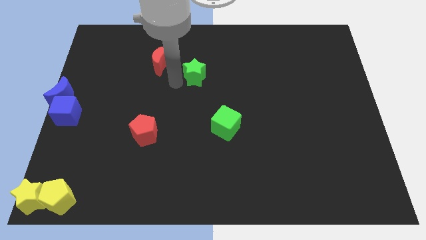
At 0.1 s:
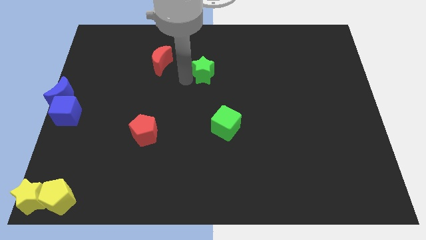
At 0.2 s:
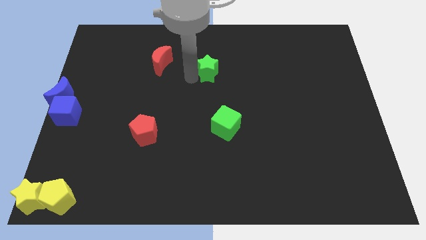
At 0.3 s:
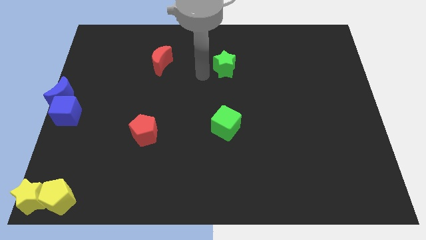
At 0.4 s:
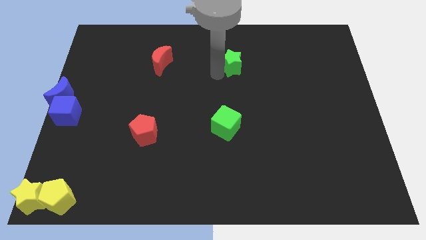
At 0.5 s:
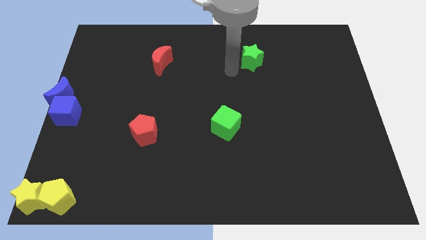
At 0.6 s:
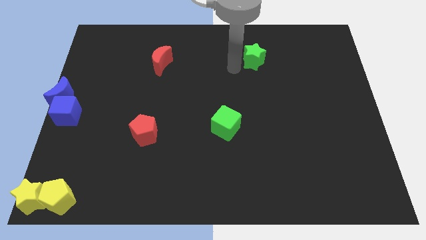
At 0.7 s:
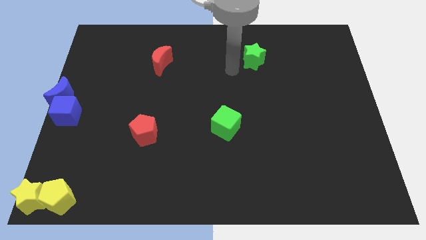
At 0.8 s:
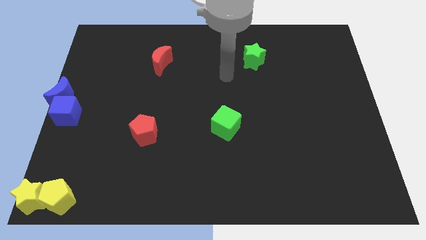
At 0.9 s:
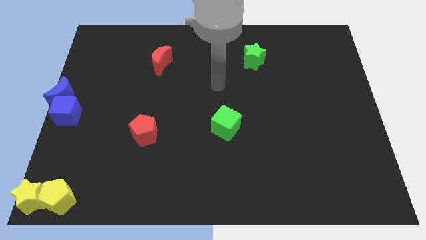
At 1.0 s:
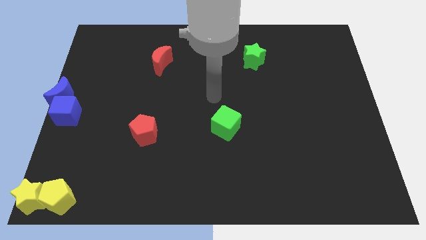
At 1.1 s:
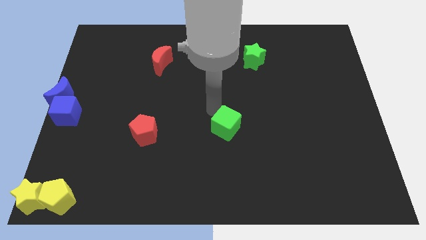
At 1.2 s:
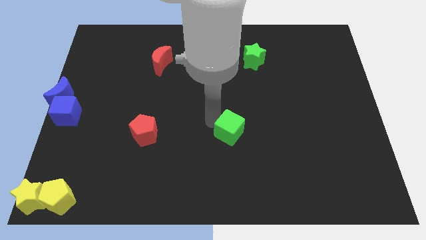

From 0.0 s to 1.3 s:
move the green star diagonally top right to the green cube

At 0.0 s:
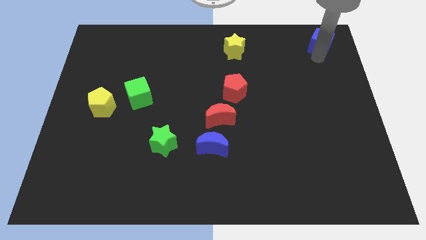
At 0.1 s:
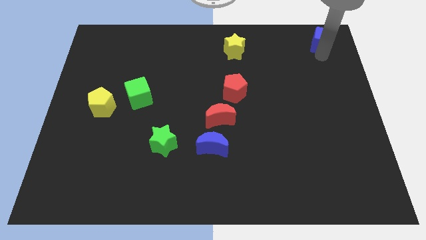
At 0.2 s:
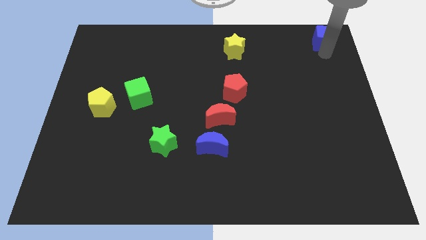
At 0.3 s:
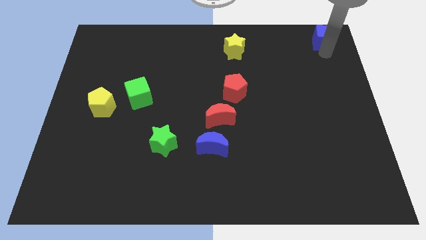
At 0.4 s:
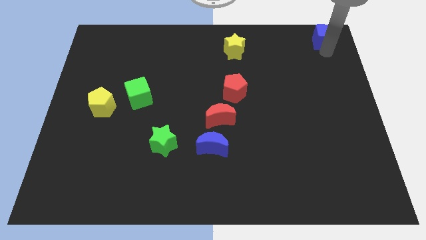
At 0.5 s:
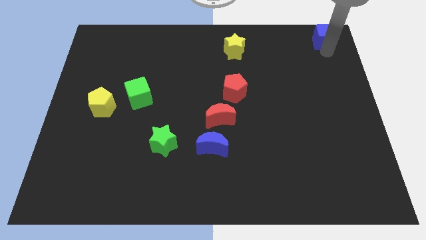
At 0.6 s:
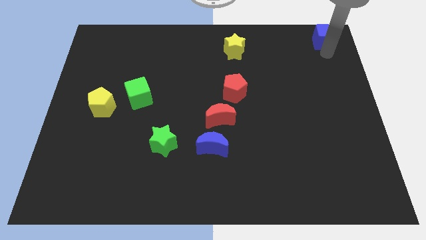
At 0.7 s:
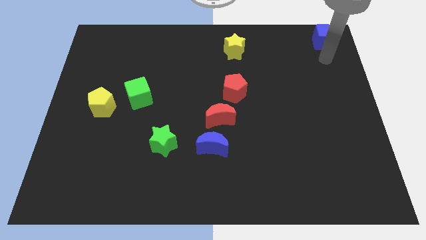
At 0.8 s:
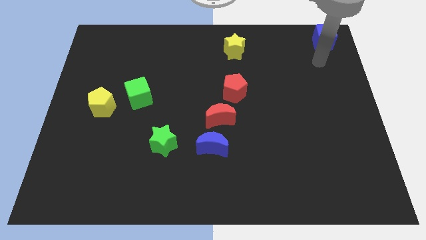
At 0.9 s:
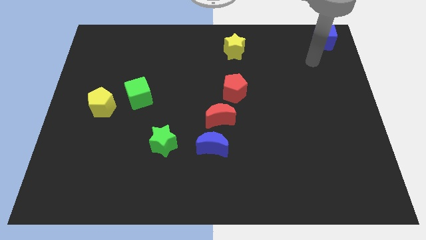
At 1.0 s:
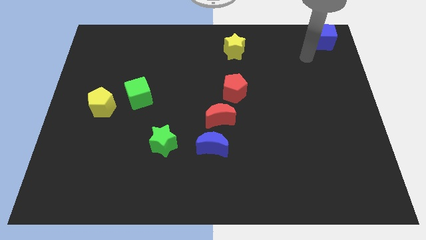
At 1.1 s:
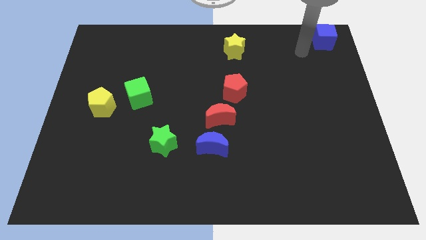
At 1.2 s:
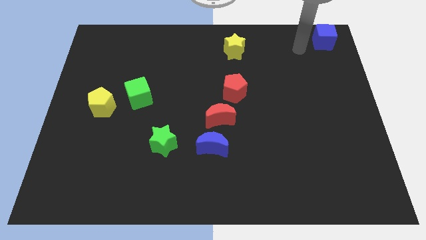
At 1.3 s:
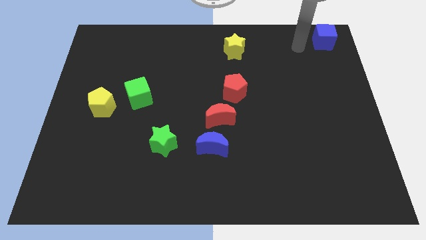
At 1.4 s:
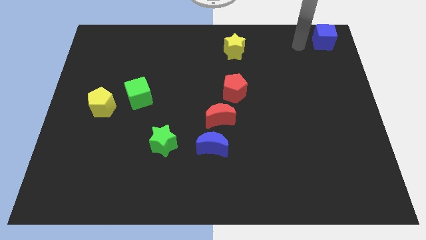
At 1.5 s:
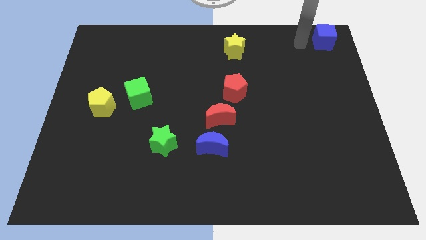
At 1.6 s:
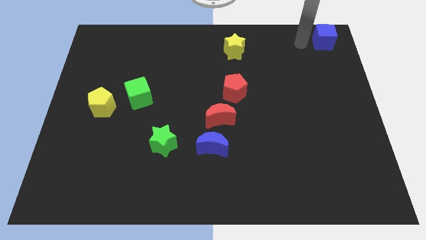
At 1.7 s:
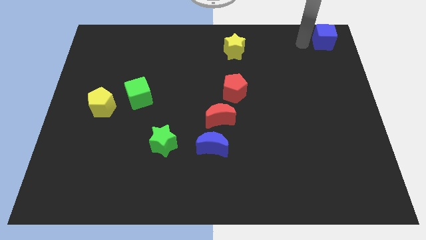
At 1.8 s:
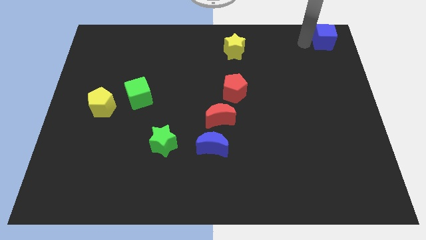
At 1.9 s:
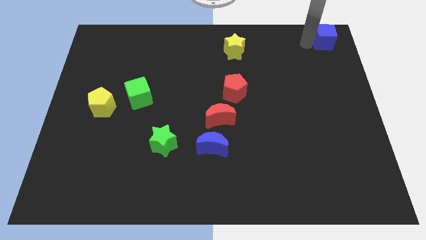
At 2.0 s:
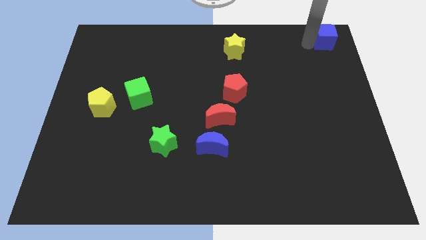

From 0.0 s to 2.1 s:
move the blue cube to the top right of the board

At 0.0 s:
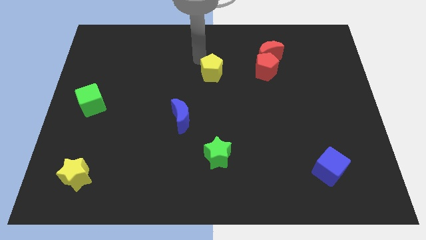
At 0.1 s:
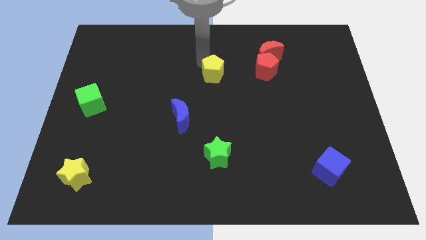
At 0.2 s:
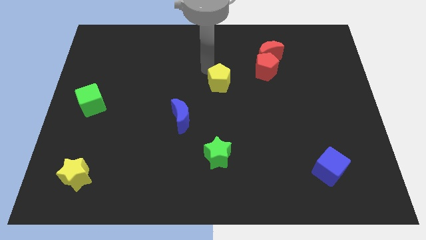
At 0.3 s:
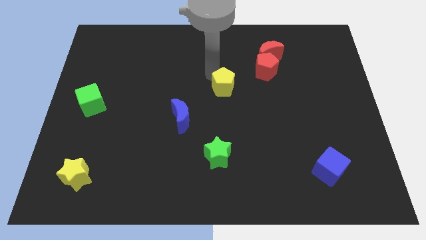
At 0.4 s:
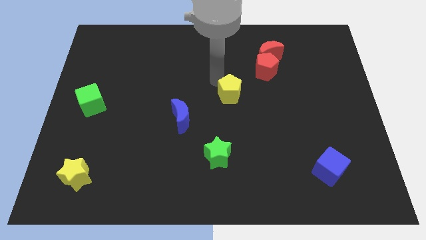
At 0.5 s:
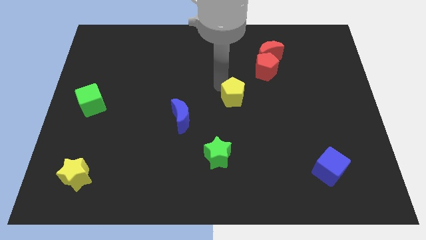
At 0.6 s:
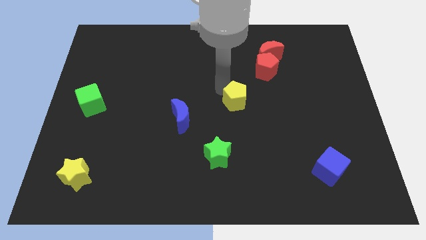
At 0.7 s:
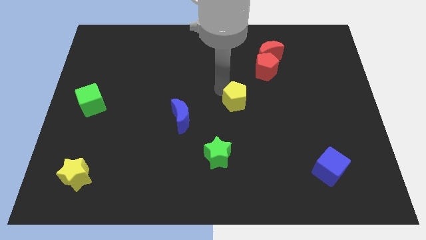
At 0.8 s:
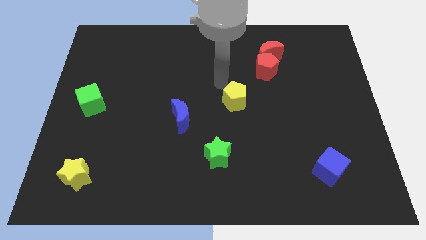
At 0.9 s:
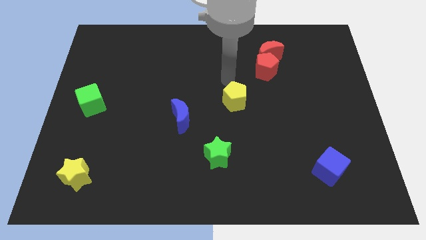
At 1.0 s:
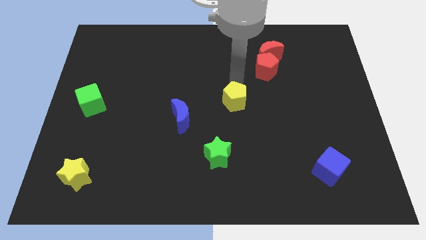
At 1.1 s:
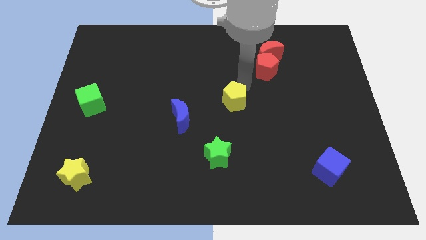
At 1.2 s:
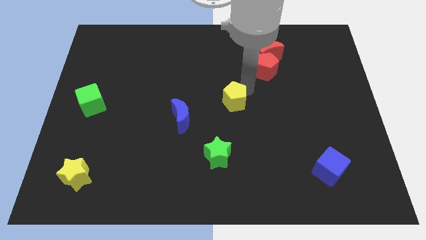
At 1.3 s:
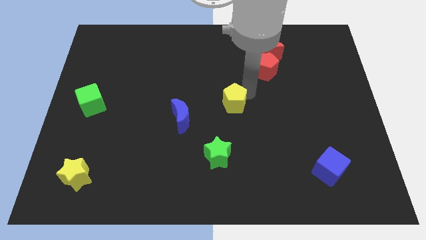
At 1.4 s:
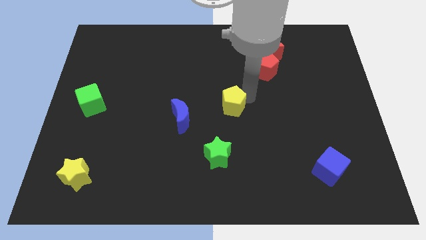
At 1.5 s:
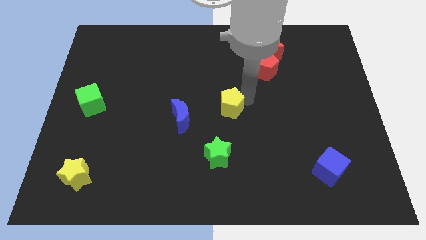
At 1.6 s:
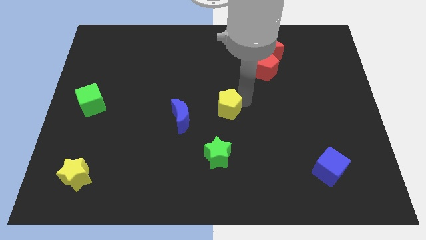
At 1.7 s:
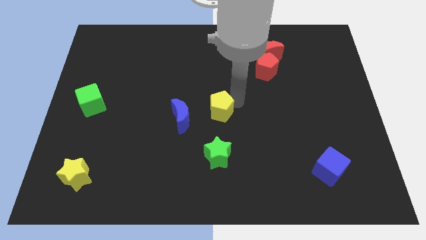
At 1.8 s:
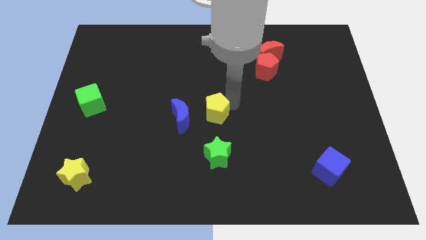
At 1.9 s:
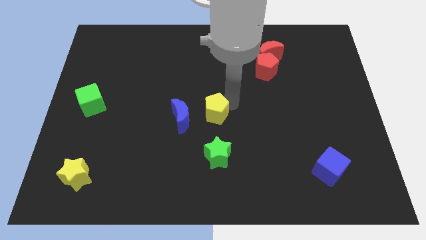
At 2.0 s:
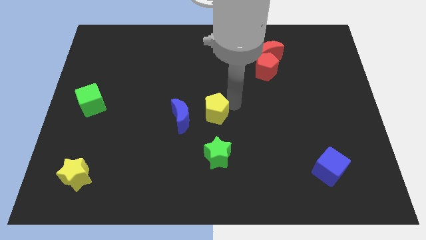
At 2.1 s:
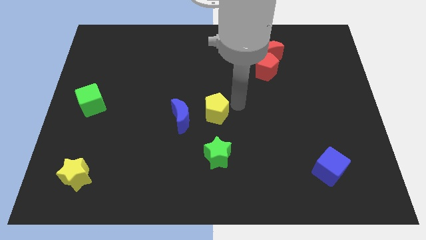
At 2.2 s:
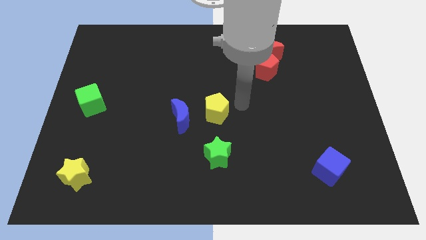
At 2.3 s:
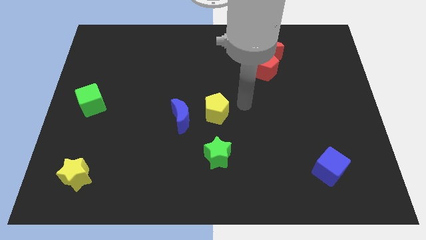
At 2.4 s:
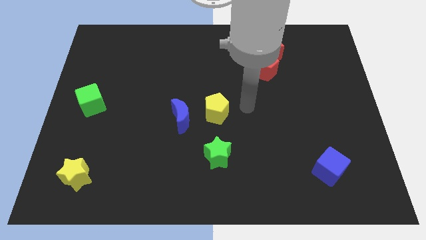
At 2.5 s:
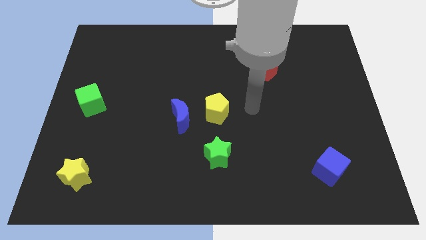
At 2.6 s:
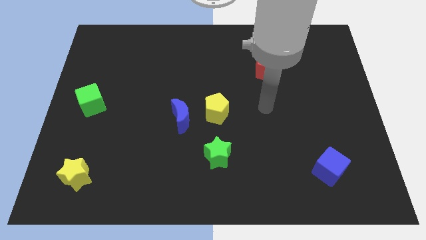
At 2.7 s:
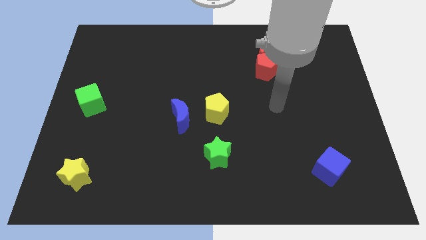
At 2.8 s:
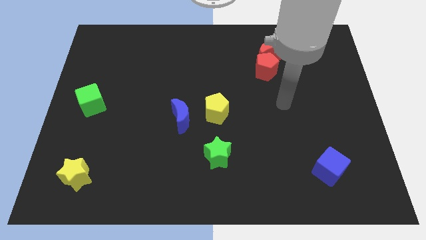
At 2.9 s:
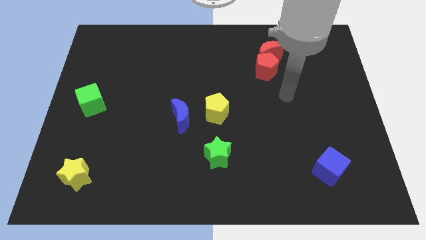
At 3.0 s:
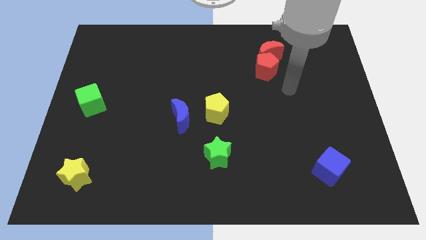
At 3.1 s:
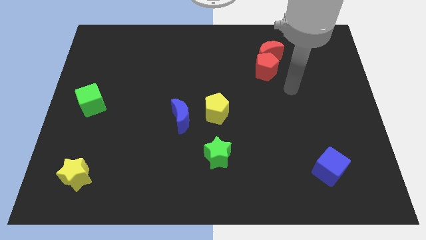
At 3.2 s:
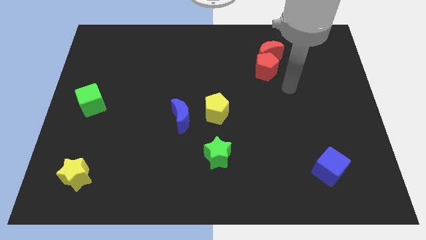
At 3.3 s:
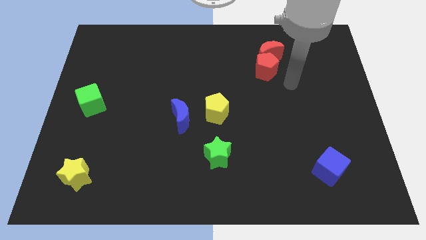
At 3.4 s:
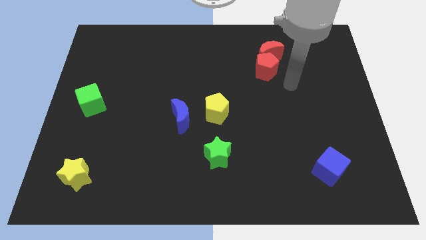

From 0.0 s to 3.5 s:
put the yellow pentagon vertically above the green star

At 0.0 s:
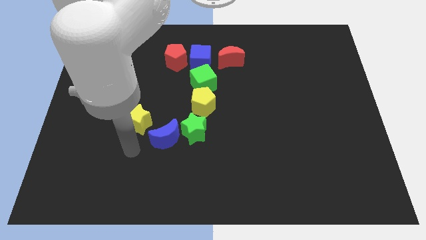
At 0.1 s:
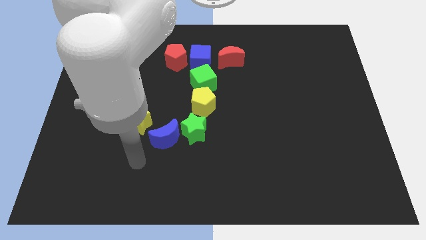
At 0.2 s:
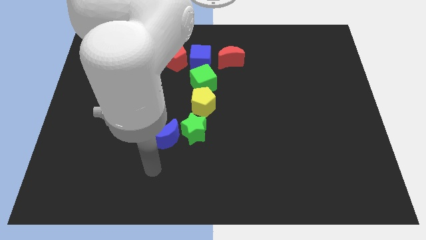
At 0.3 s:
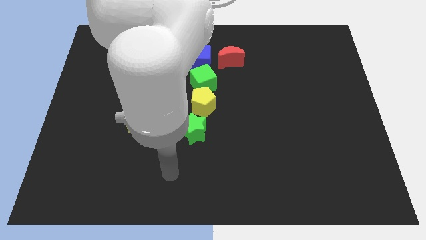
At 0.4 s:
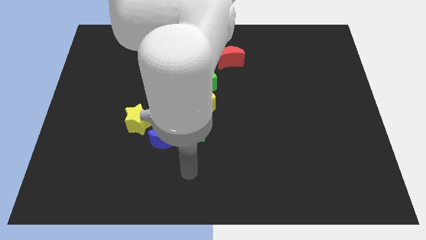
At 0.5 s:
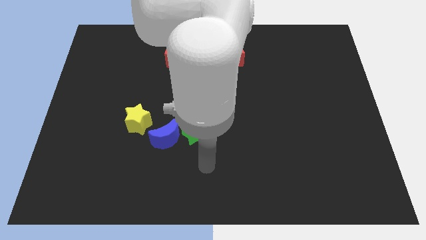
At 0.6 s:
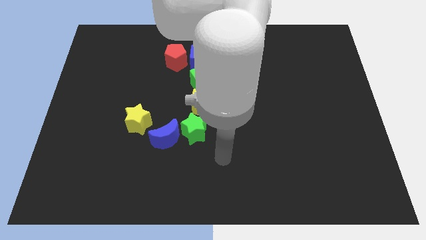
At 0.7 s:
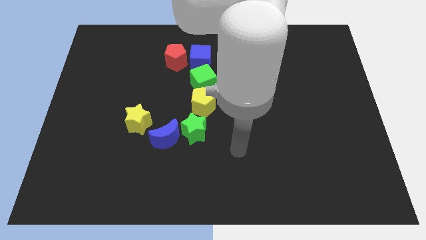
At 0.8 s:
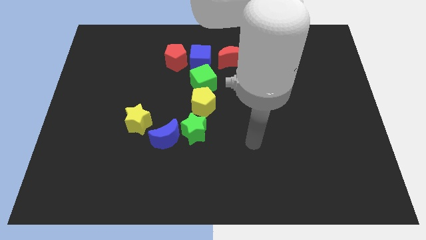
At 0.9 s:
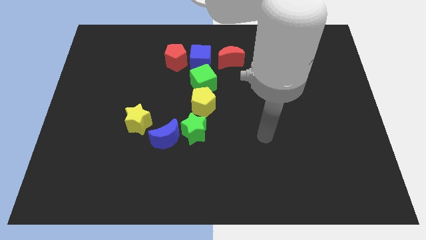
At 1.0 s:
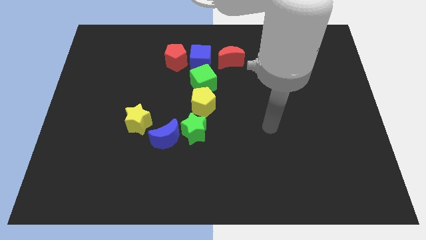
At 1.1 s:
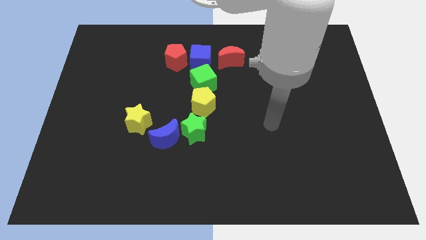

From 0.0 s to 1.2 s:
move to the right side of the green star

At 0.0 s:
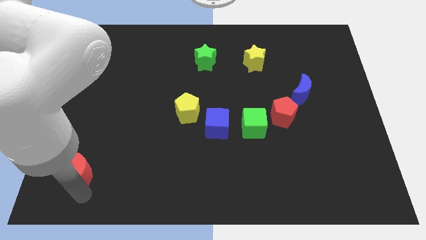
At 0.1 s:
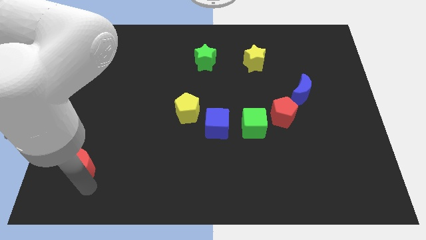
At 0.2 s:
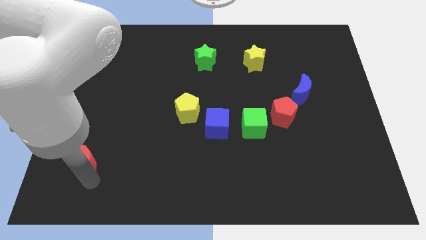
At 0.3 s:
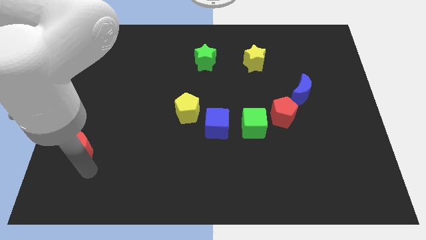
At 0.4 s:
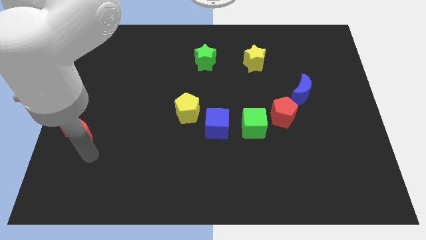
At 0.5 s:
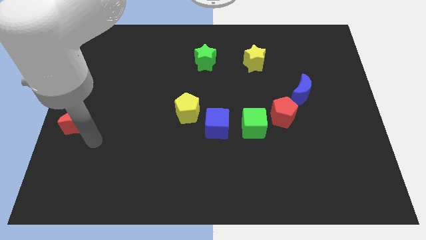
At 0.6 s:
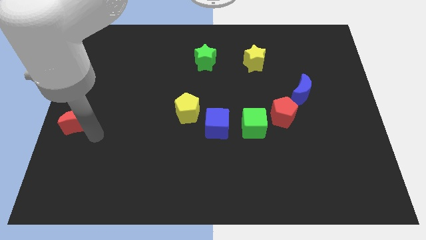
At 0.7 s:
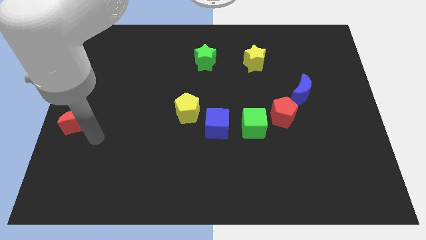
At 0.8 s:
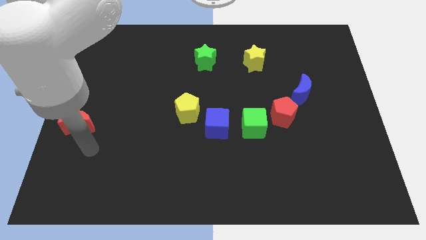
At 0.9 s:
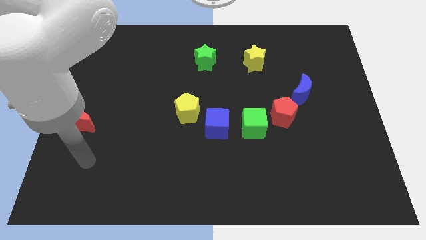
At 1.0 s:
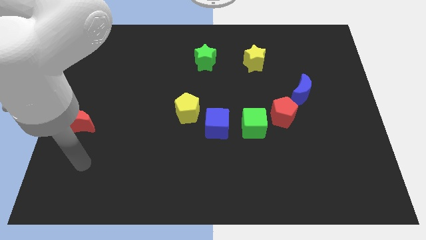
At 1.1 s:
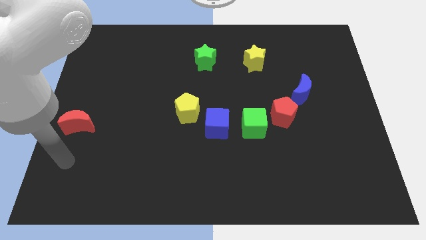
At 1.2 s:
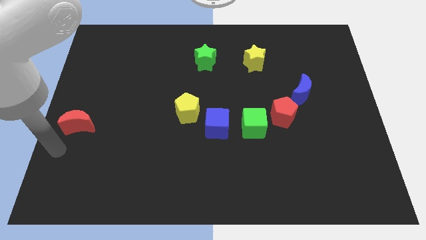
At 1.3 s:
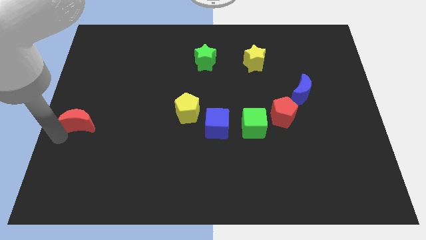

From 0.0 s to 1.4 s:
move the red crescent to the center left of the board
